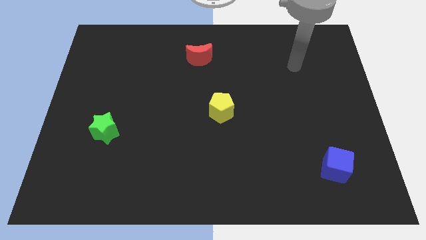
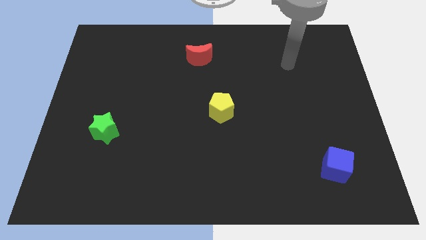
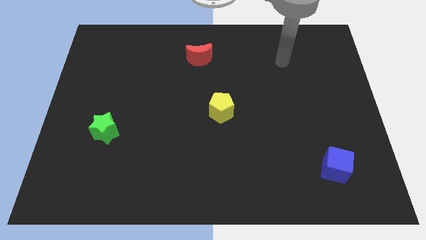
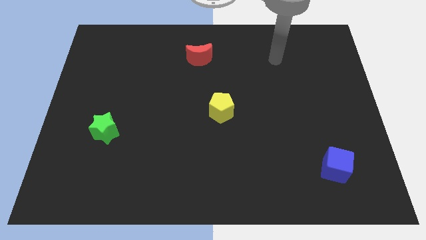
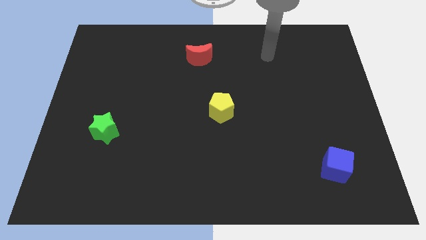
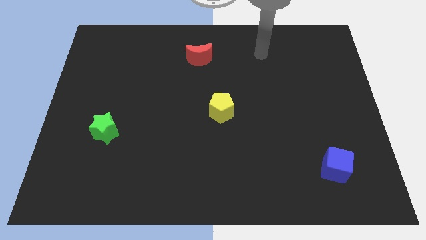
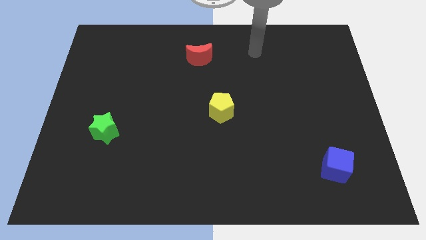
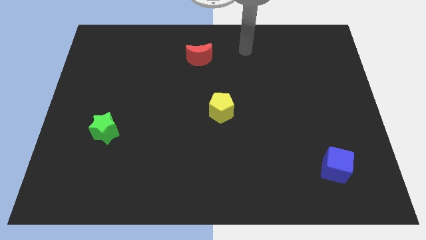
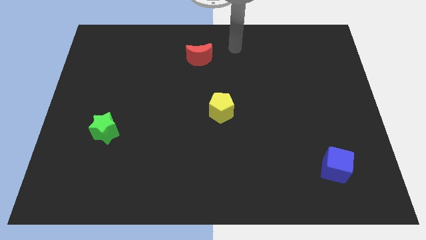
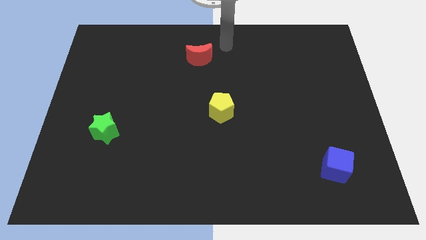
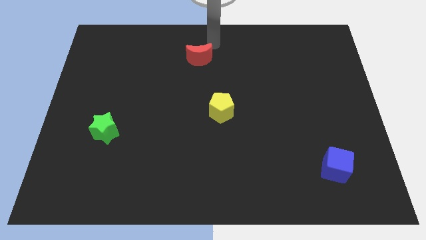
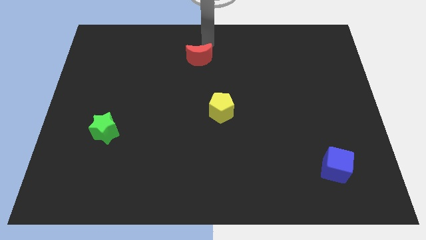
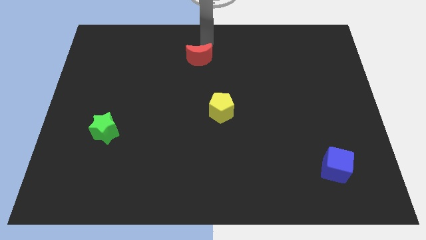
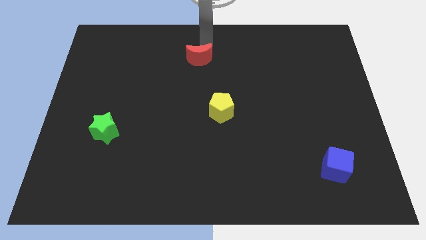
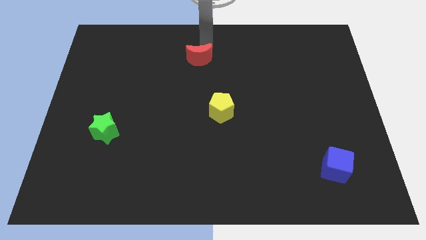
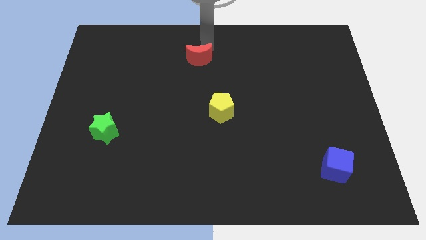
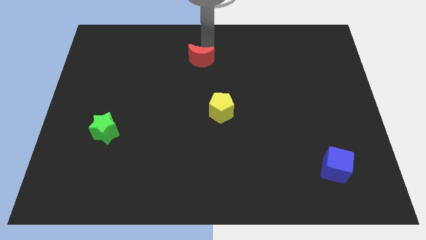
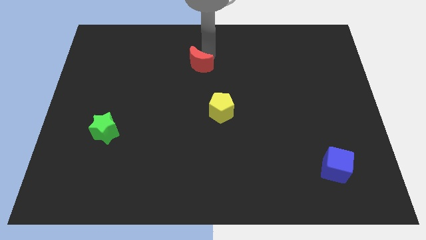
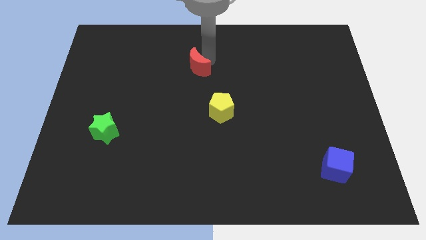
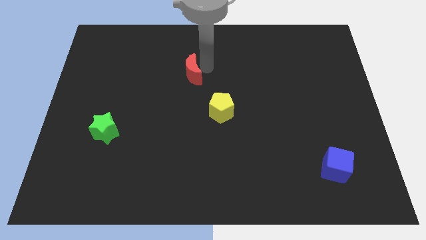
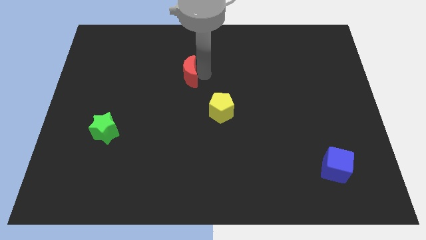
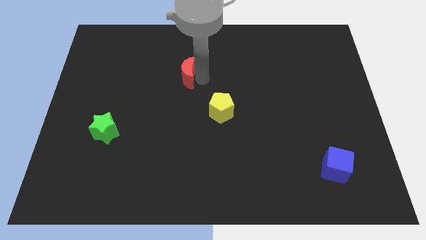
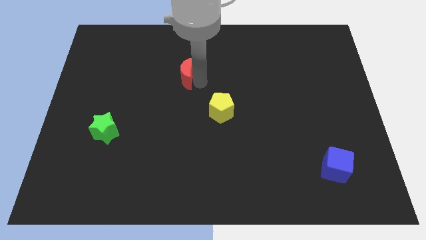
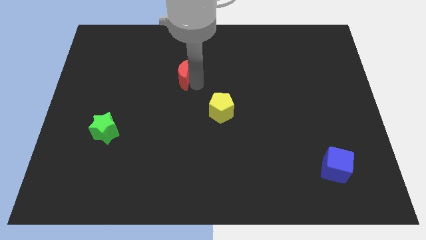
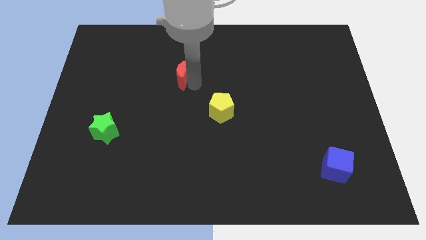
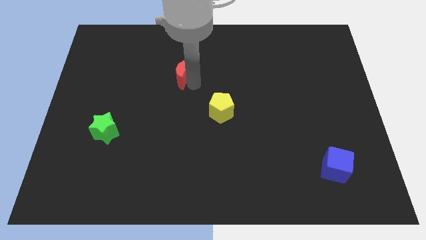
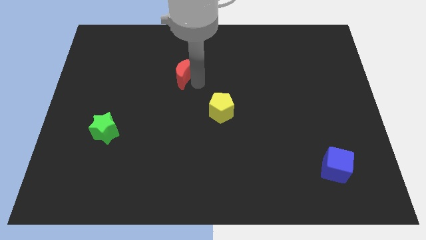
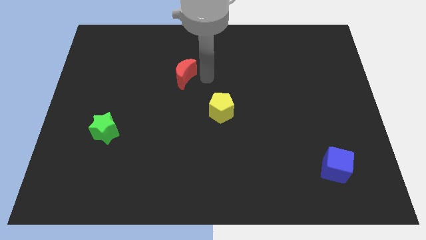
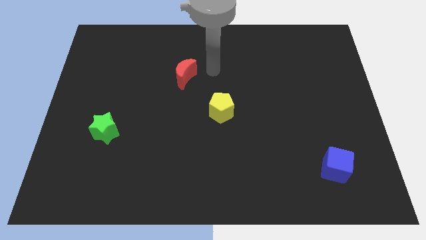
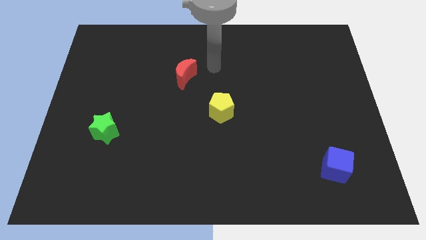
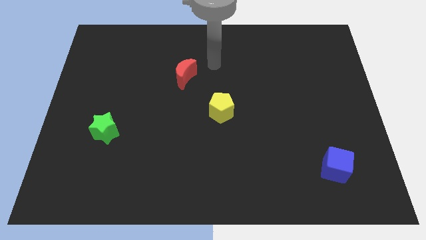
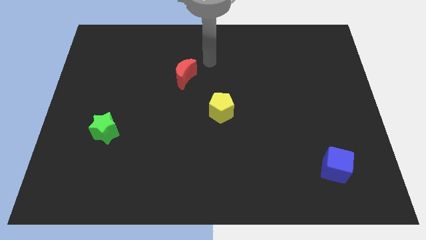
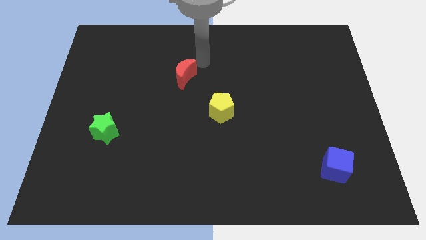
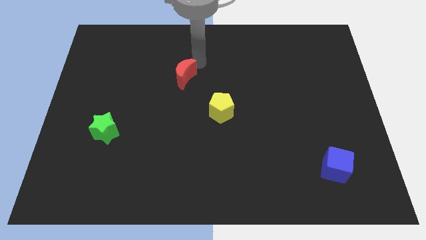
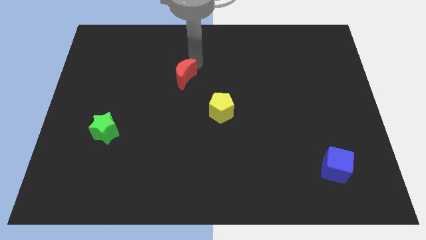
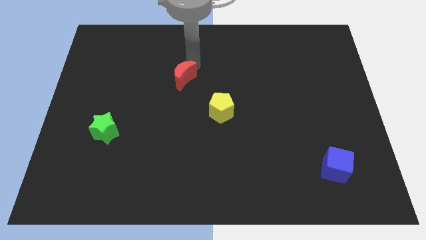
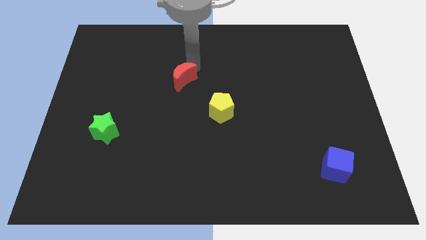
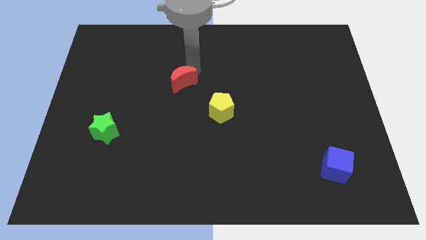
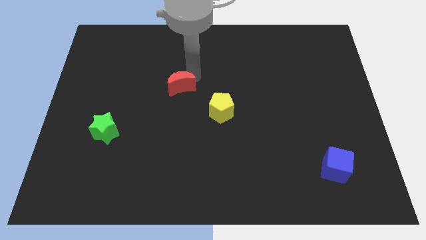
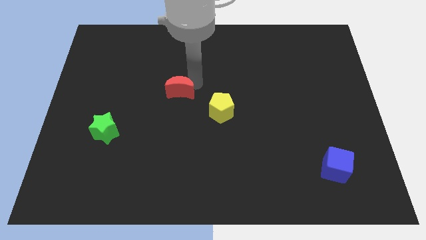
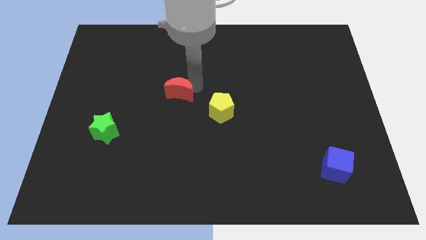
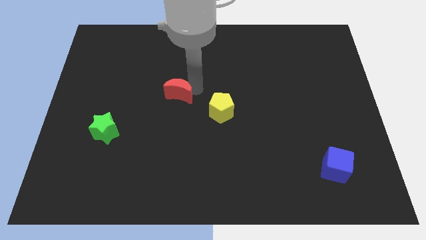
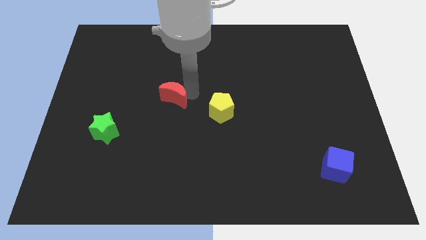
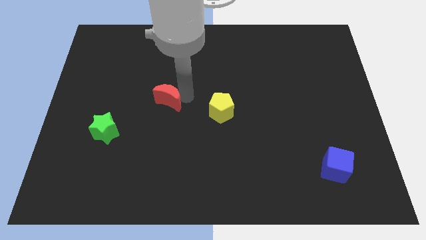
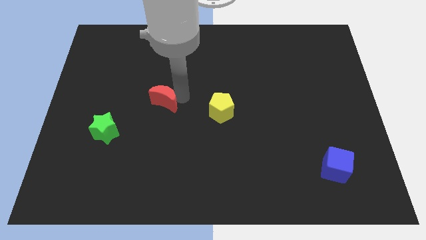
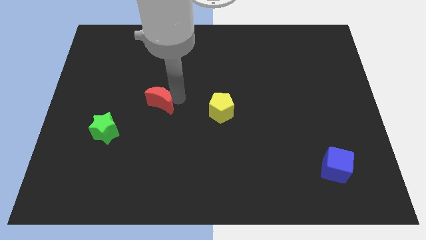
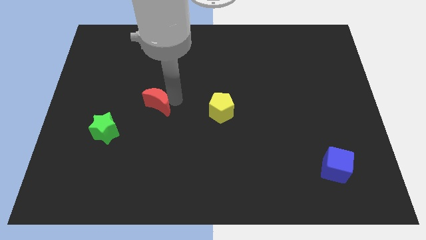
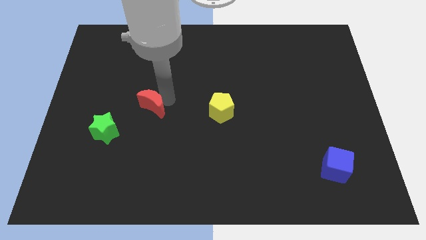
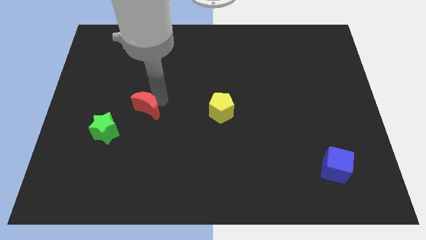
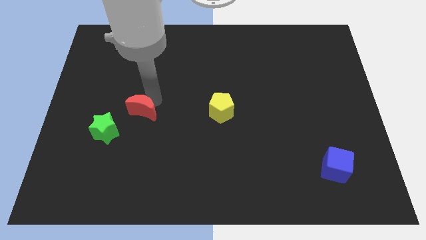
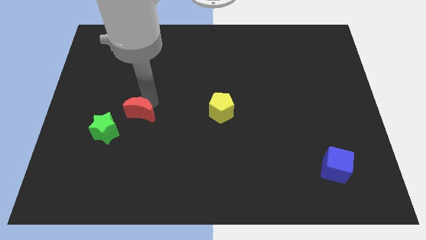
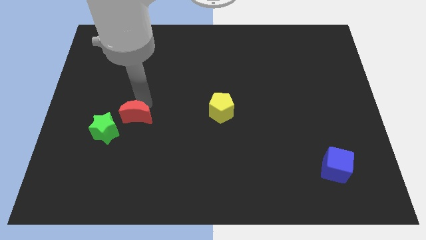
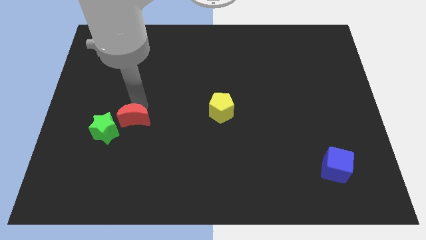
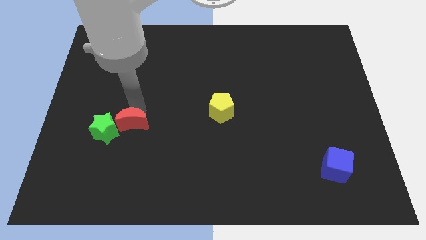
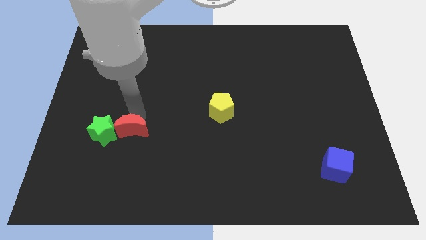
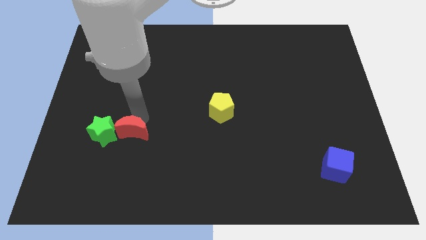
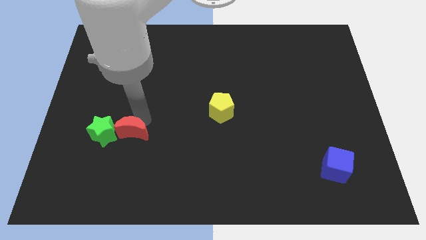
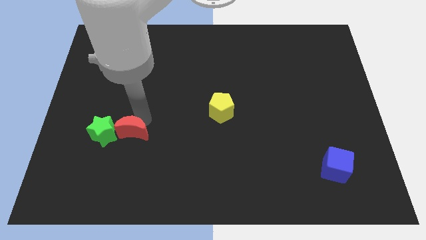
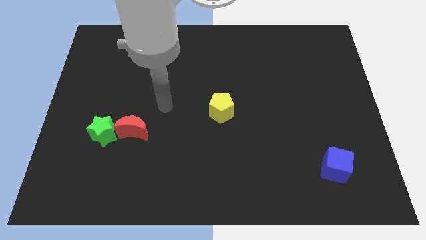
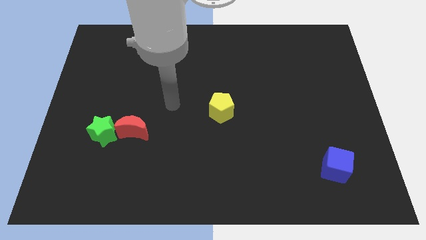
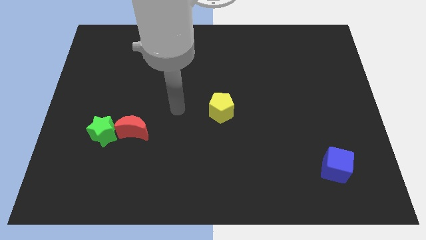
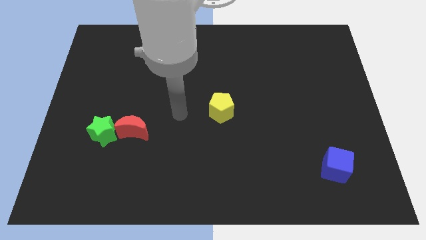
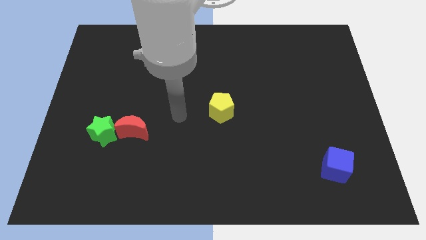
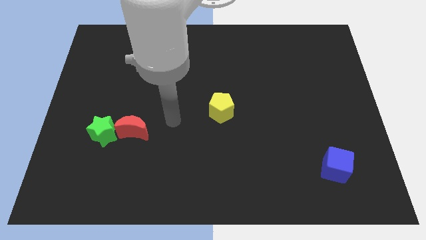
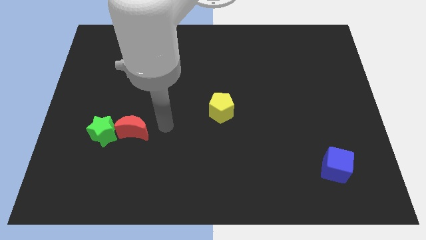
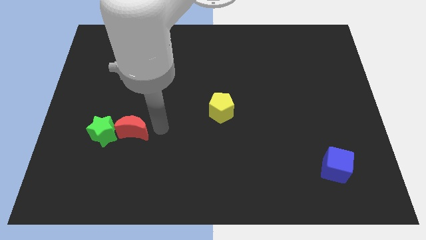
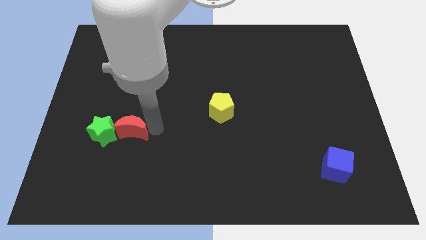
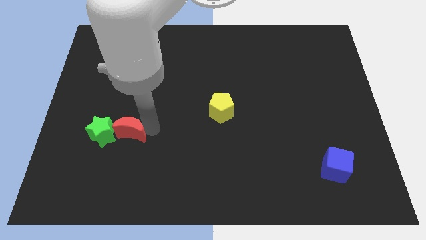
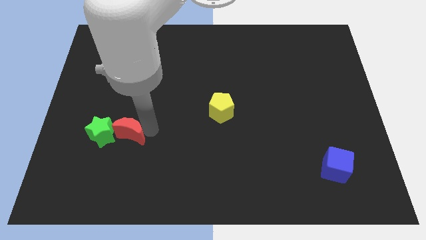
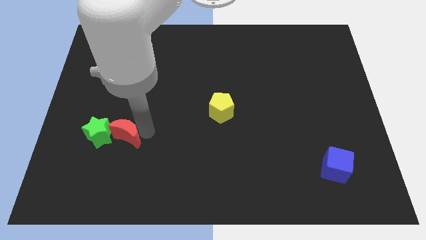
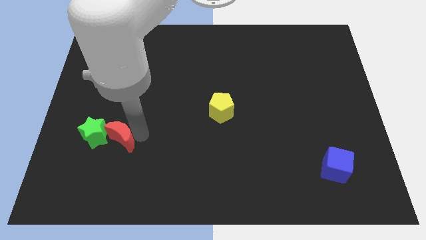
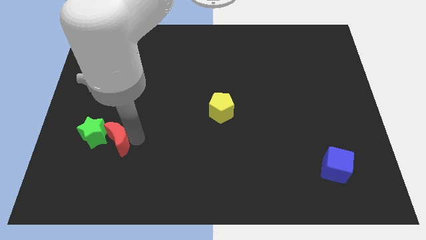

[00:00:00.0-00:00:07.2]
push the moon to the star

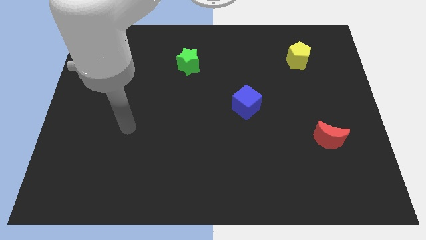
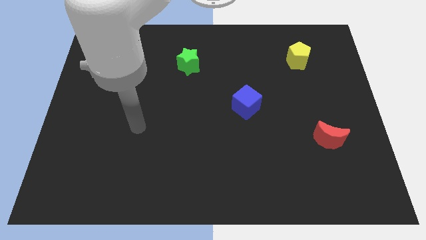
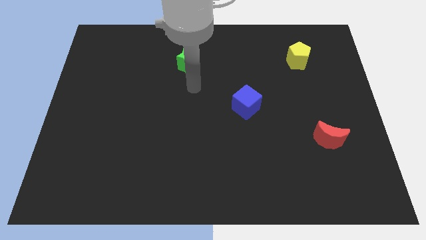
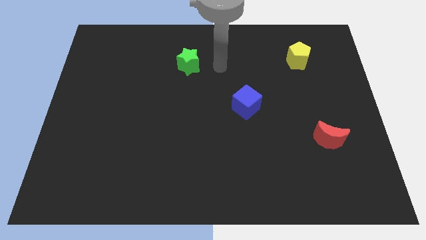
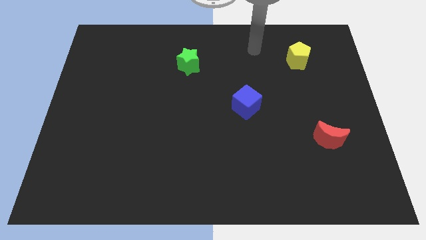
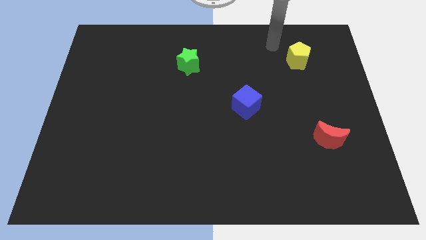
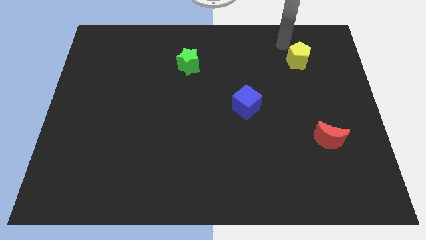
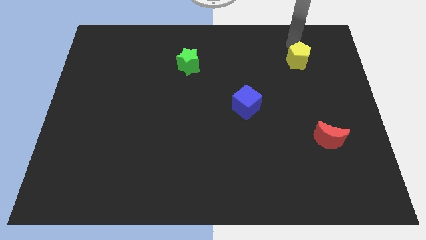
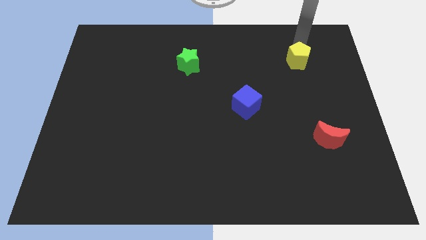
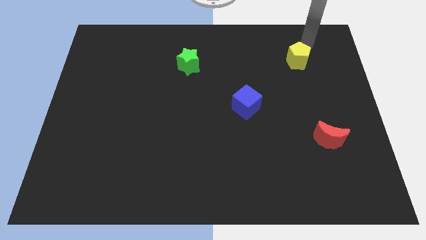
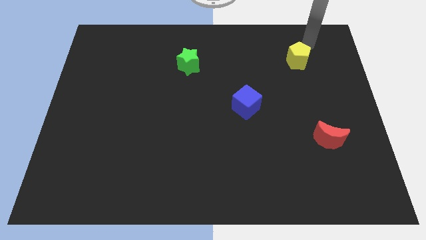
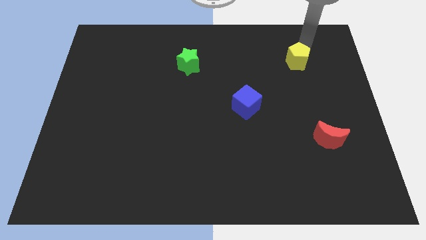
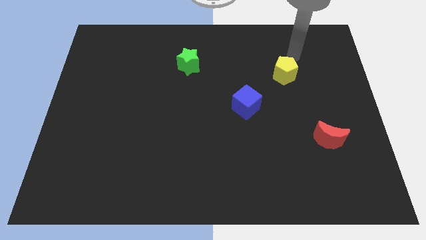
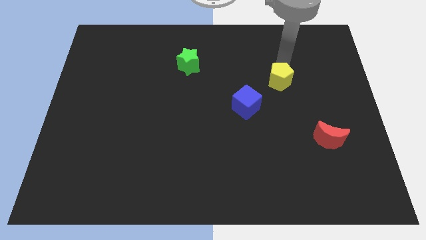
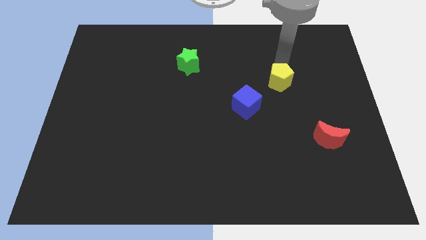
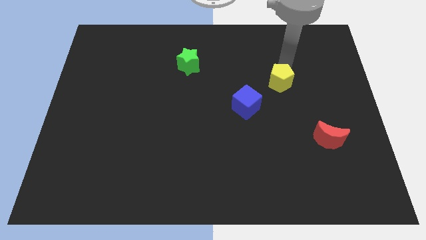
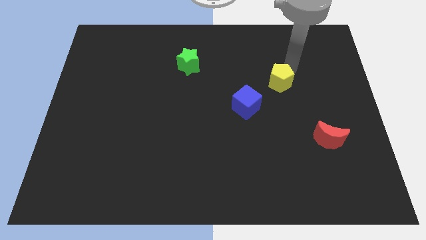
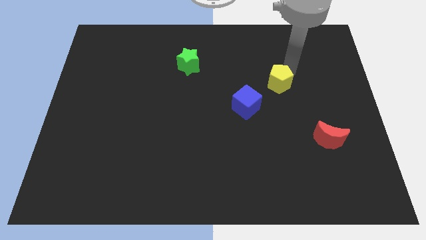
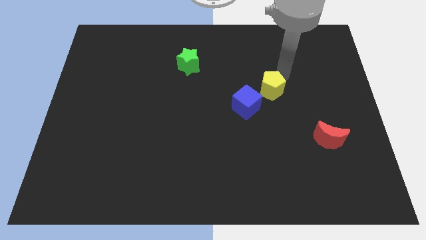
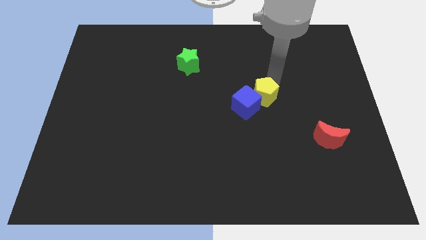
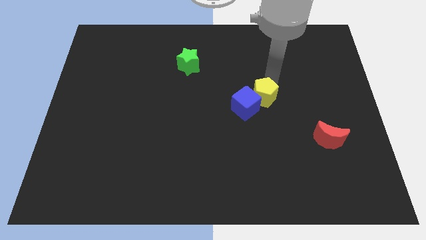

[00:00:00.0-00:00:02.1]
push the yellow block close to the blue block
